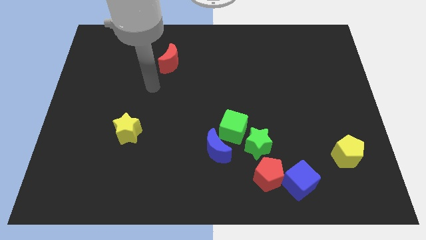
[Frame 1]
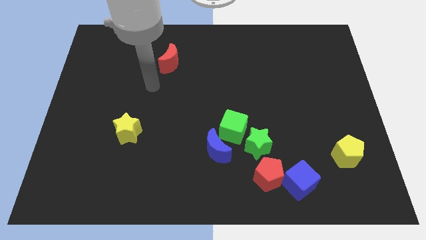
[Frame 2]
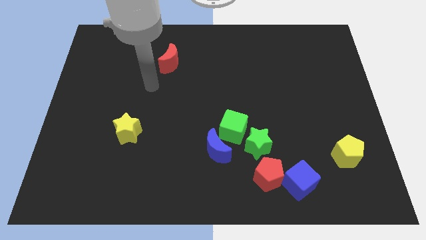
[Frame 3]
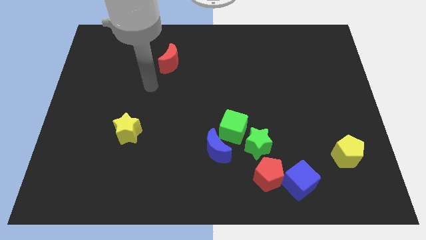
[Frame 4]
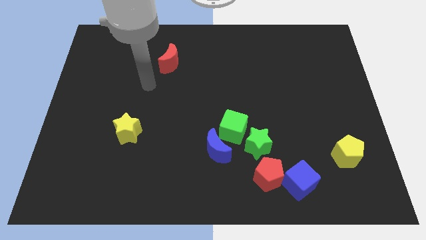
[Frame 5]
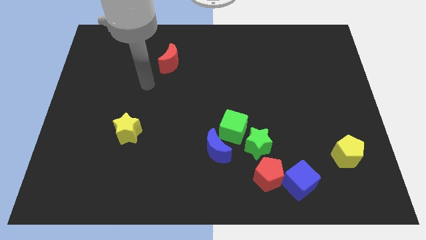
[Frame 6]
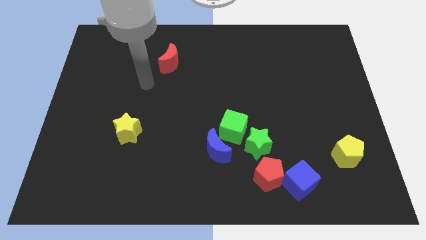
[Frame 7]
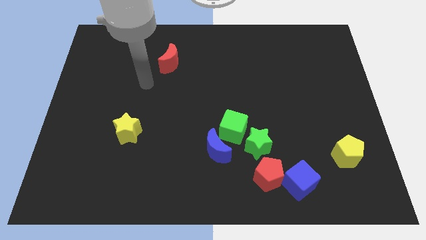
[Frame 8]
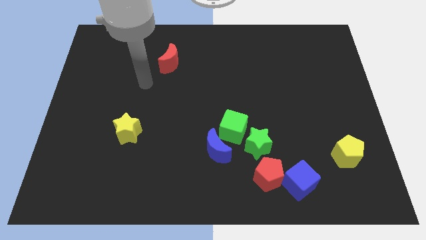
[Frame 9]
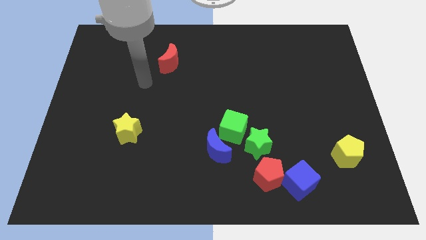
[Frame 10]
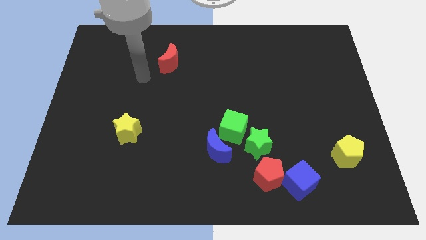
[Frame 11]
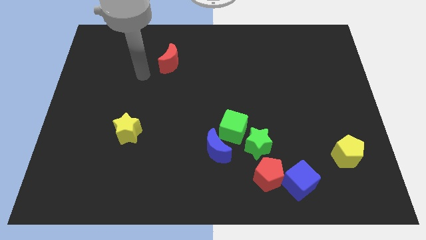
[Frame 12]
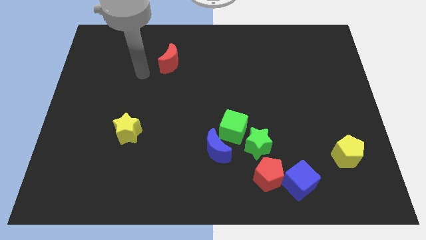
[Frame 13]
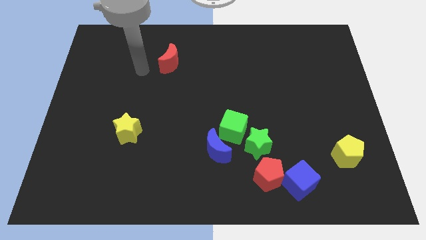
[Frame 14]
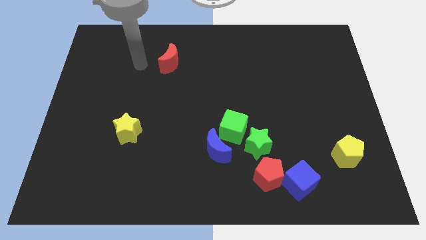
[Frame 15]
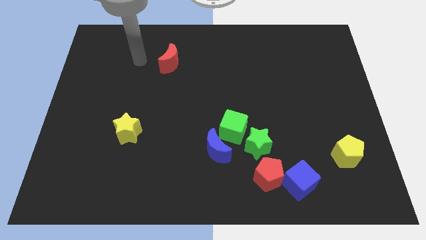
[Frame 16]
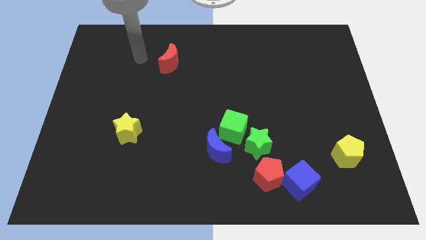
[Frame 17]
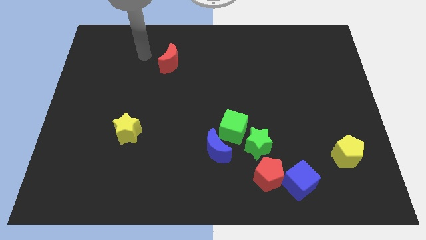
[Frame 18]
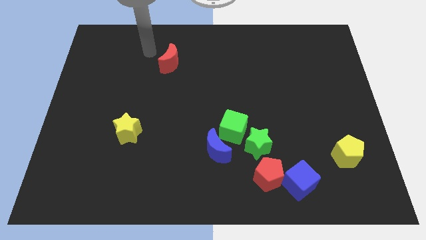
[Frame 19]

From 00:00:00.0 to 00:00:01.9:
point your arm to the left side of red moon

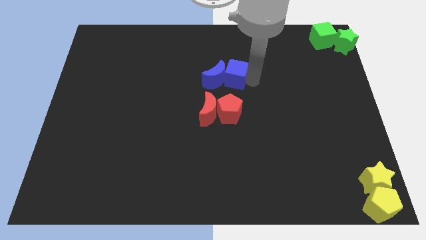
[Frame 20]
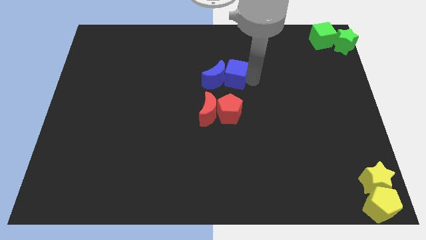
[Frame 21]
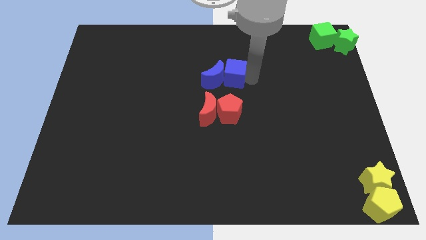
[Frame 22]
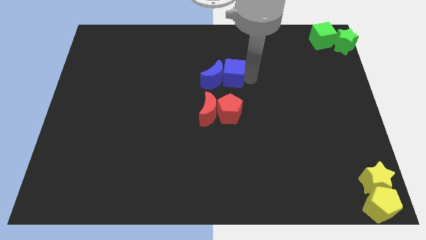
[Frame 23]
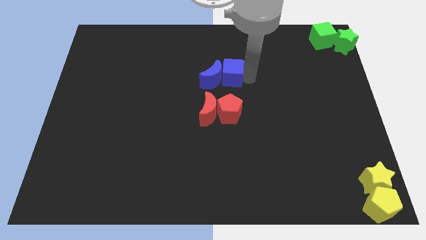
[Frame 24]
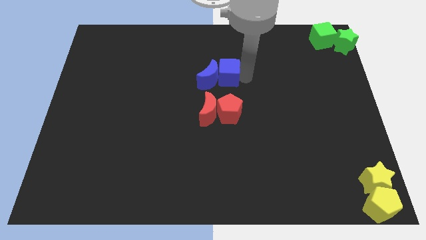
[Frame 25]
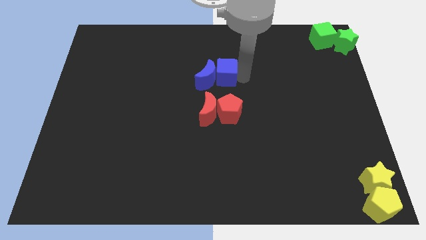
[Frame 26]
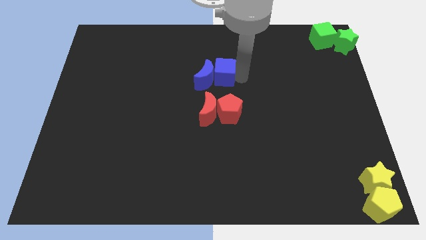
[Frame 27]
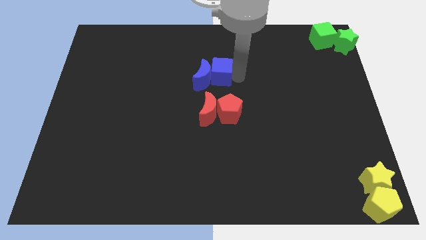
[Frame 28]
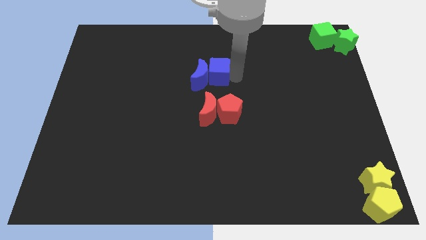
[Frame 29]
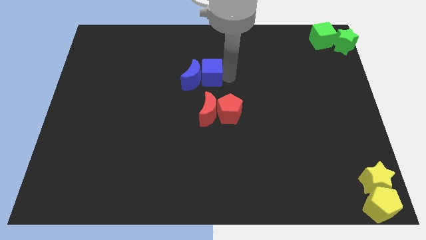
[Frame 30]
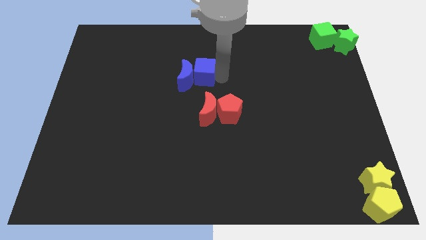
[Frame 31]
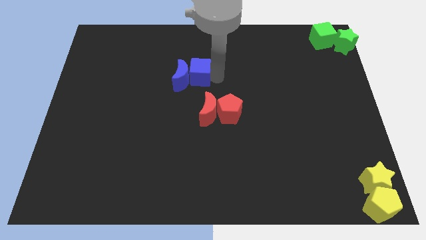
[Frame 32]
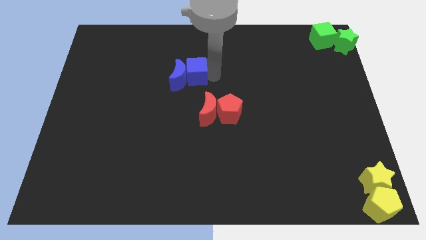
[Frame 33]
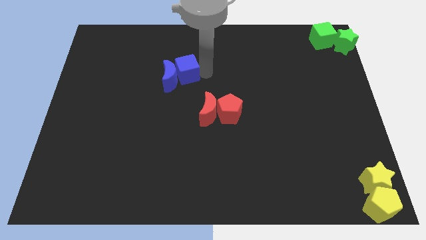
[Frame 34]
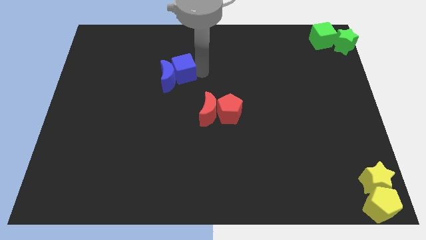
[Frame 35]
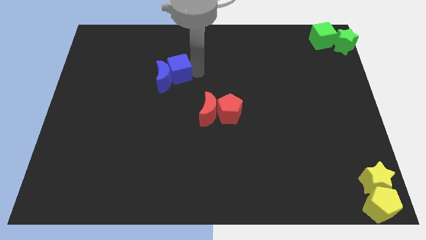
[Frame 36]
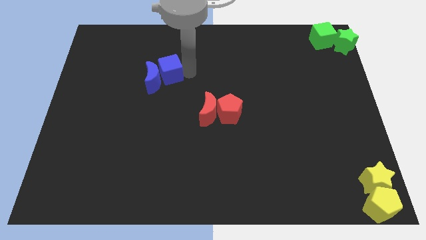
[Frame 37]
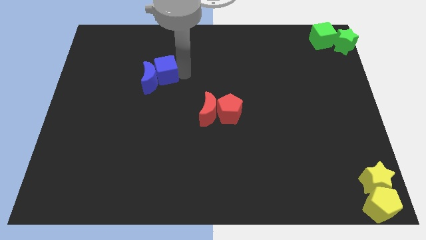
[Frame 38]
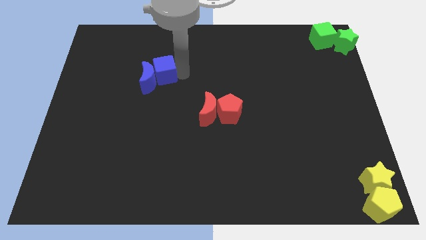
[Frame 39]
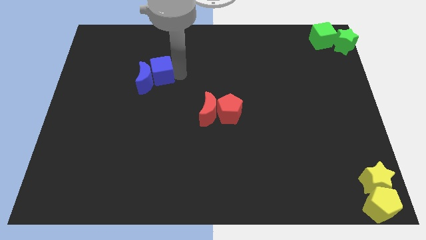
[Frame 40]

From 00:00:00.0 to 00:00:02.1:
push the blue blocks towards the left side of the board

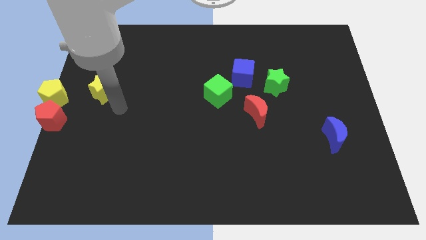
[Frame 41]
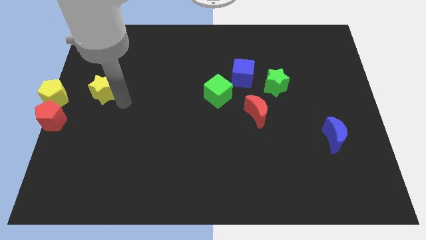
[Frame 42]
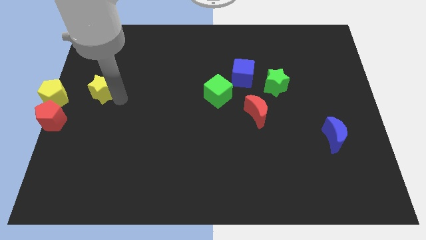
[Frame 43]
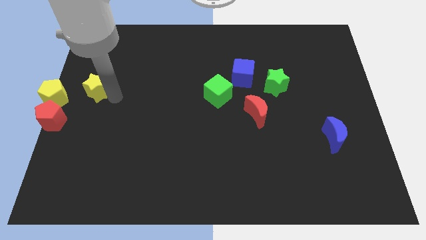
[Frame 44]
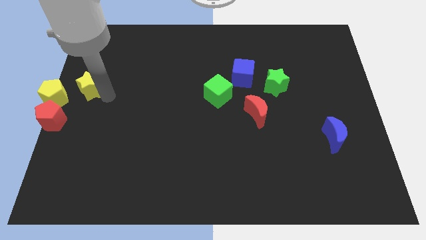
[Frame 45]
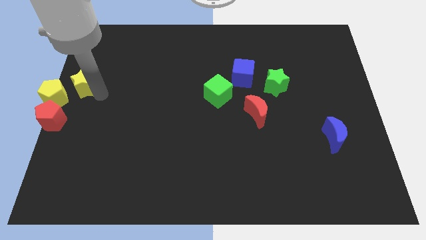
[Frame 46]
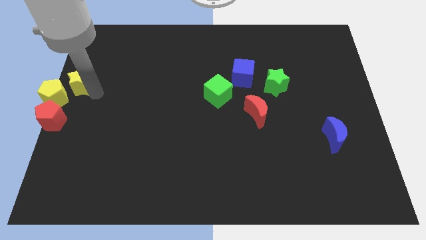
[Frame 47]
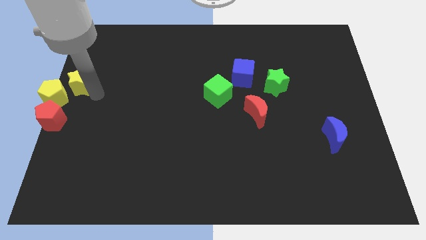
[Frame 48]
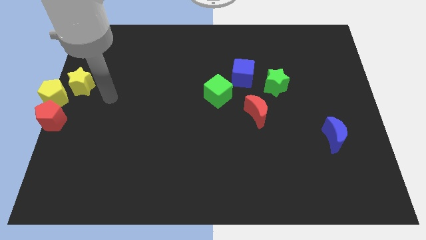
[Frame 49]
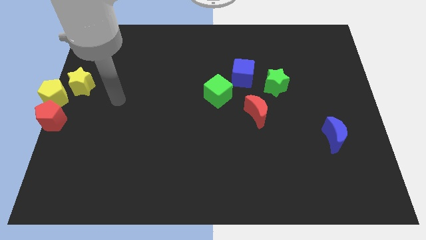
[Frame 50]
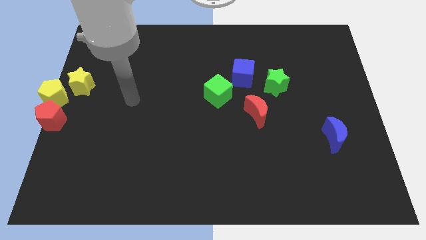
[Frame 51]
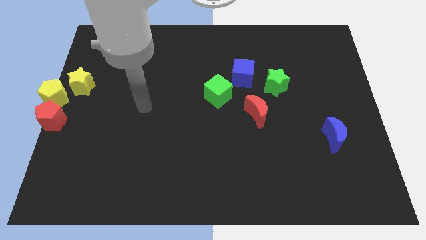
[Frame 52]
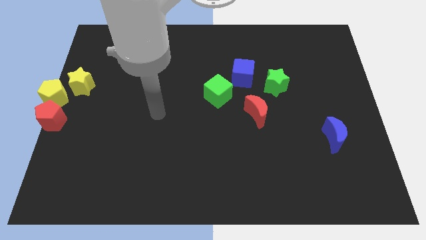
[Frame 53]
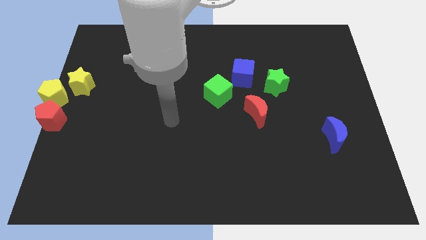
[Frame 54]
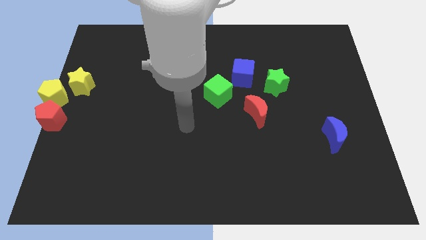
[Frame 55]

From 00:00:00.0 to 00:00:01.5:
push the yellow star towards the yellow pentagon

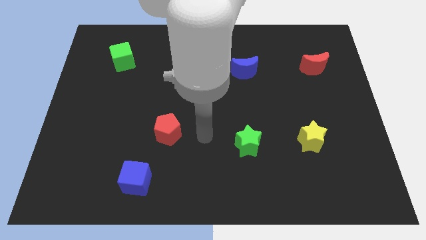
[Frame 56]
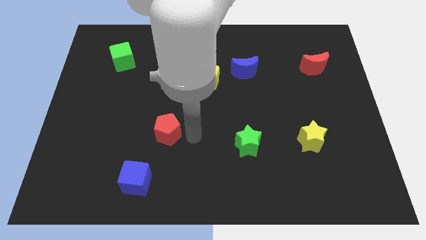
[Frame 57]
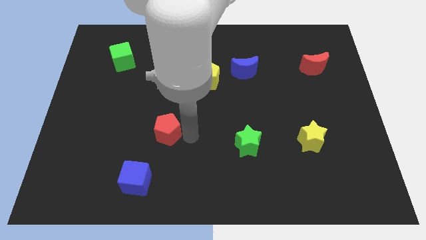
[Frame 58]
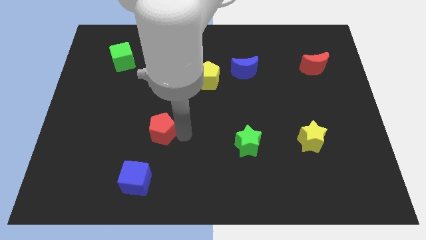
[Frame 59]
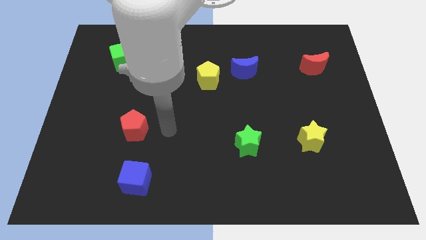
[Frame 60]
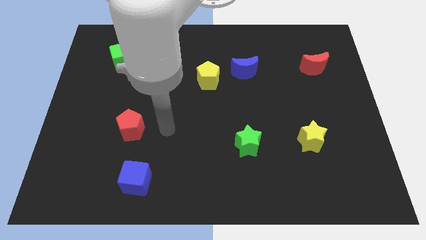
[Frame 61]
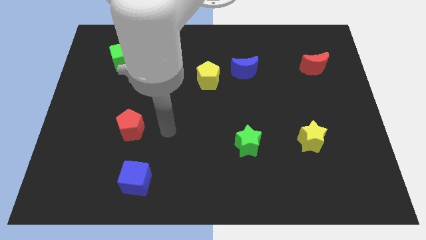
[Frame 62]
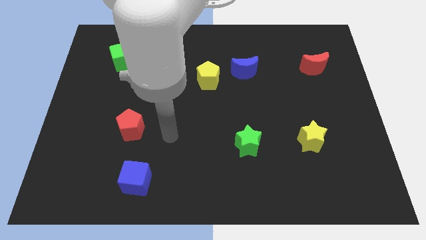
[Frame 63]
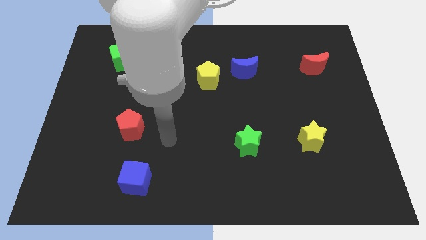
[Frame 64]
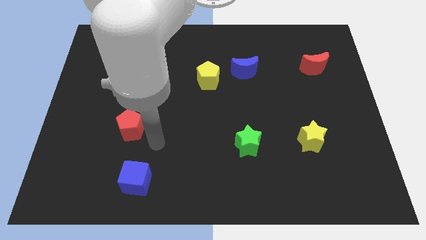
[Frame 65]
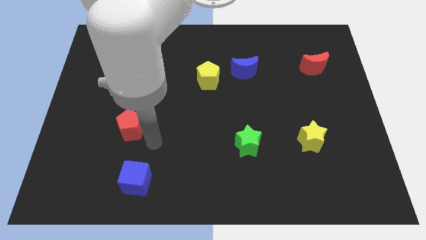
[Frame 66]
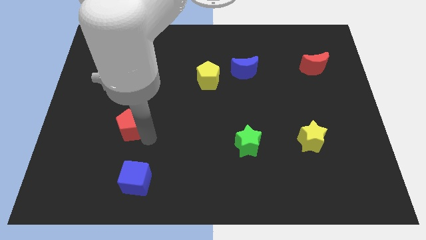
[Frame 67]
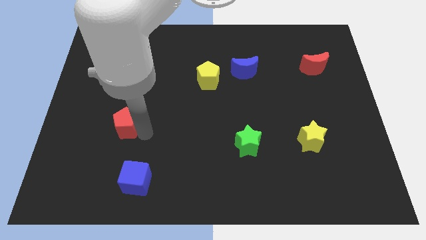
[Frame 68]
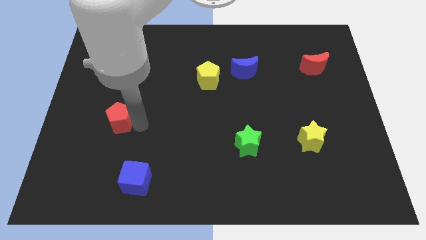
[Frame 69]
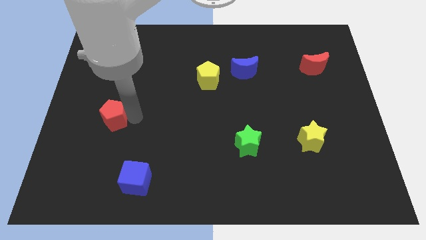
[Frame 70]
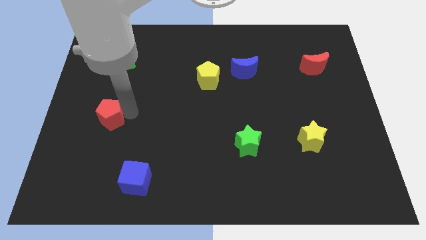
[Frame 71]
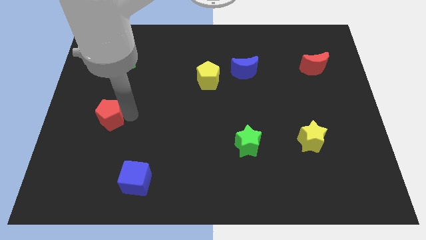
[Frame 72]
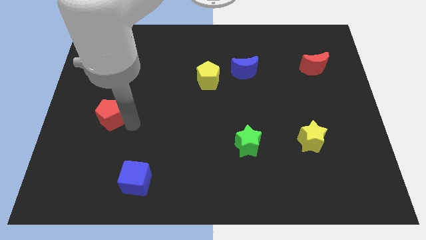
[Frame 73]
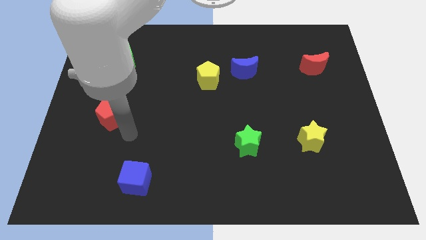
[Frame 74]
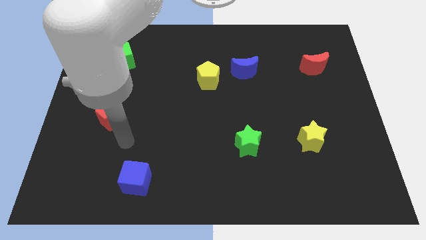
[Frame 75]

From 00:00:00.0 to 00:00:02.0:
slide the red pentagon to the center left of the board

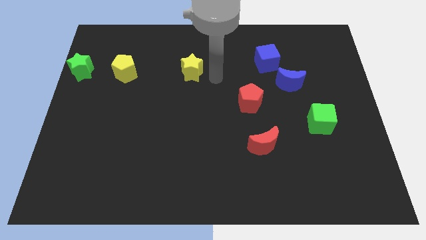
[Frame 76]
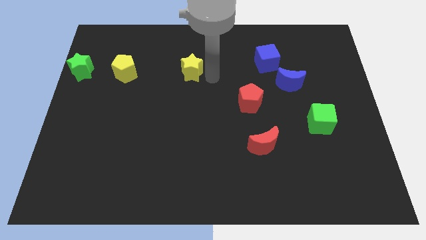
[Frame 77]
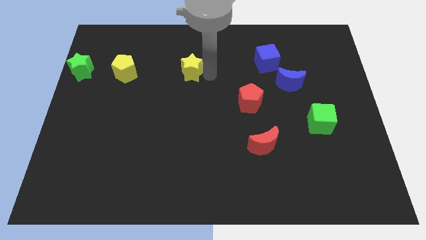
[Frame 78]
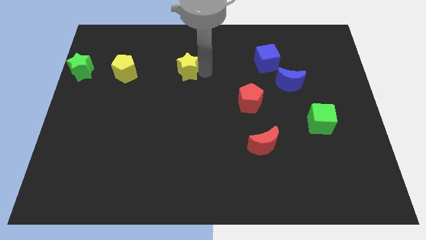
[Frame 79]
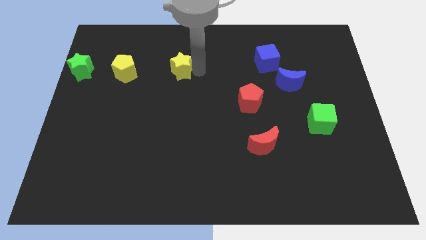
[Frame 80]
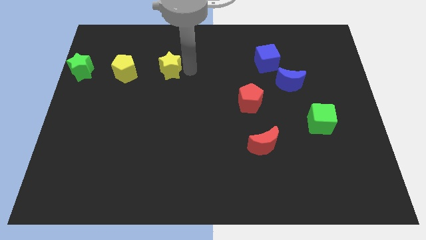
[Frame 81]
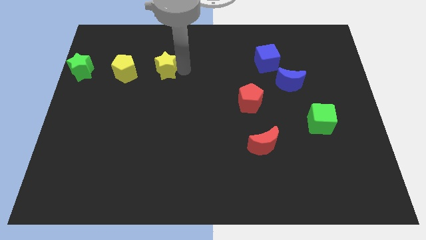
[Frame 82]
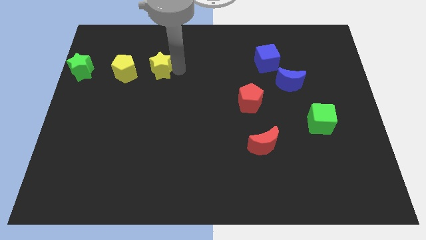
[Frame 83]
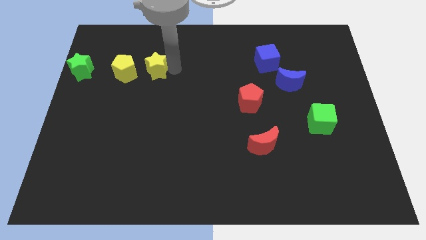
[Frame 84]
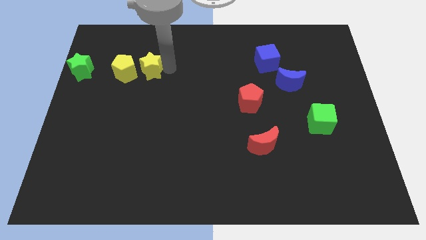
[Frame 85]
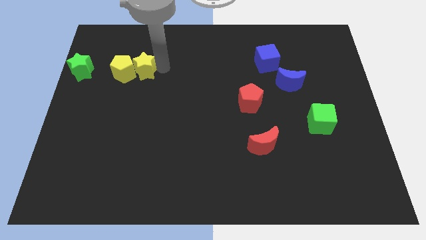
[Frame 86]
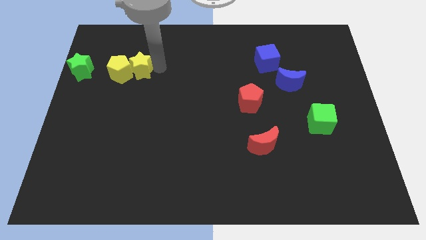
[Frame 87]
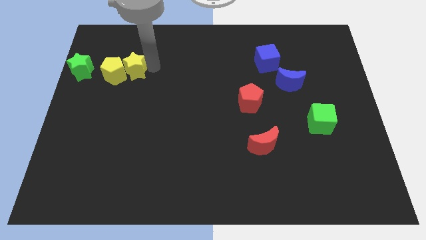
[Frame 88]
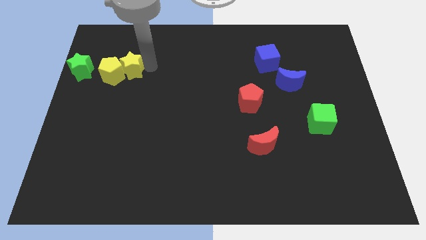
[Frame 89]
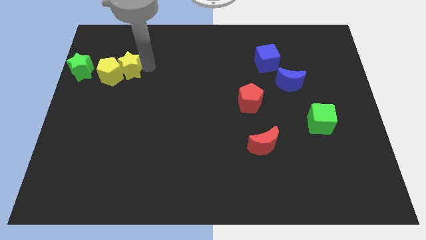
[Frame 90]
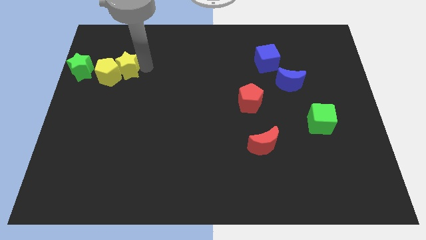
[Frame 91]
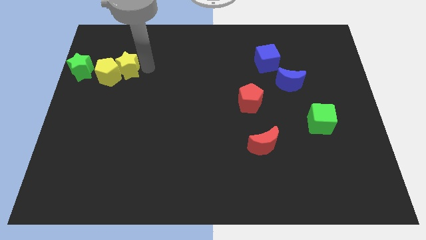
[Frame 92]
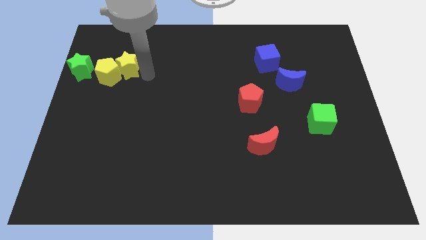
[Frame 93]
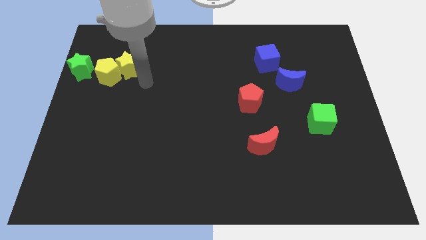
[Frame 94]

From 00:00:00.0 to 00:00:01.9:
push the yellow star into yellow pentagon
